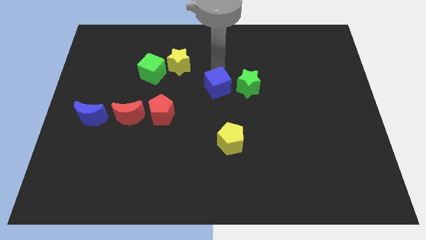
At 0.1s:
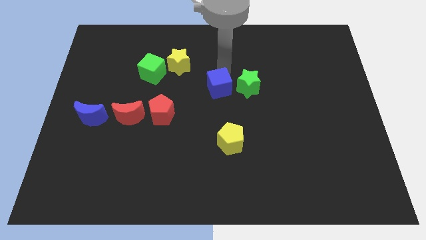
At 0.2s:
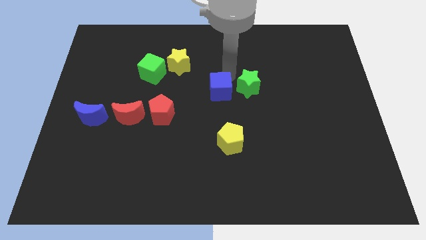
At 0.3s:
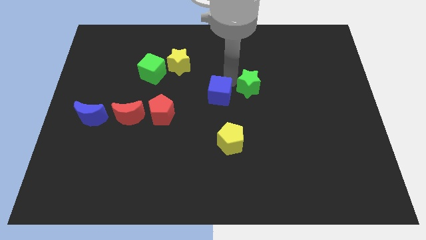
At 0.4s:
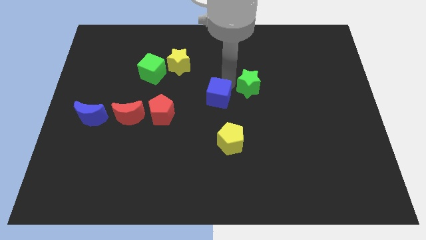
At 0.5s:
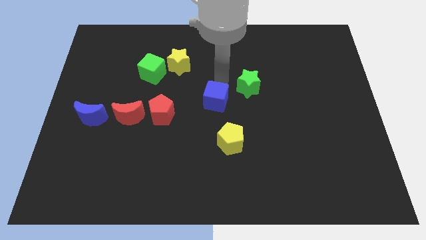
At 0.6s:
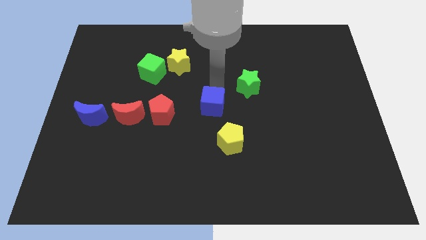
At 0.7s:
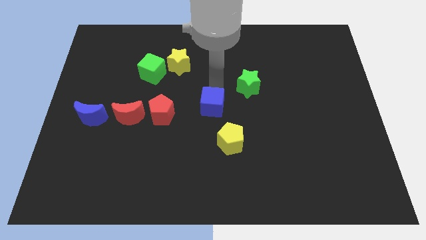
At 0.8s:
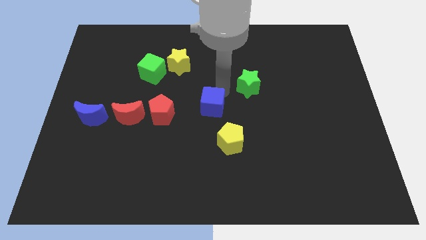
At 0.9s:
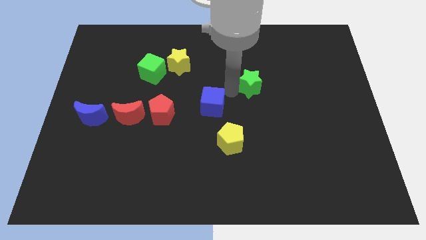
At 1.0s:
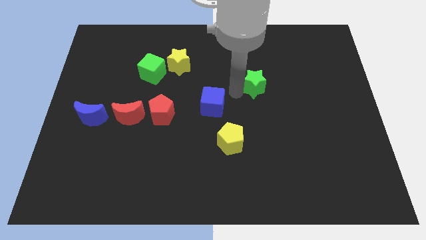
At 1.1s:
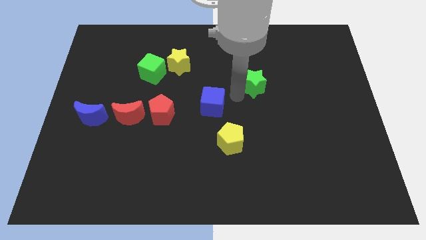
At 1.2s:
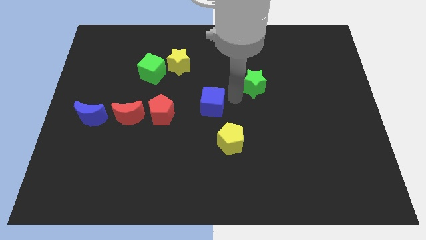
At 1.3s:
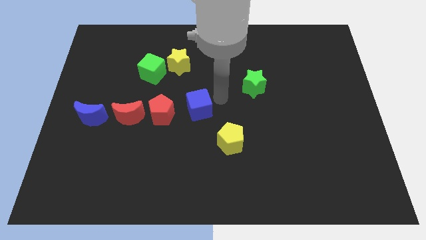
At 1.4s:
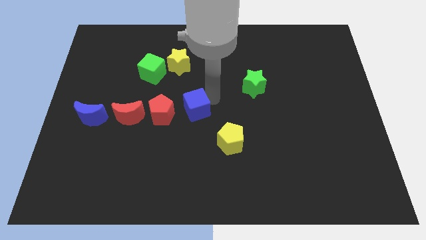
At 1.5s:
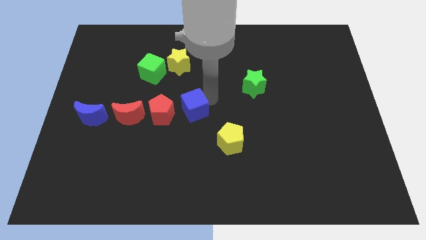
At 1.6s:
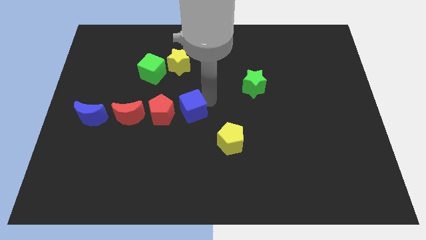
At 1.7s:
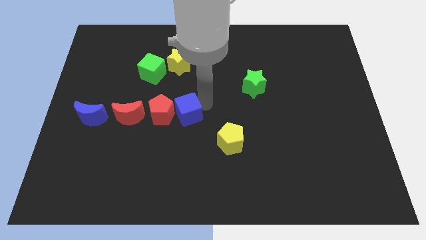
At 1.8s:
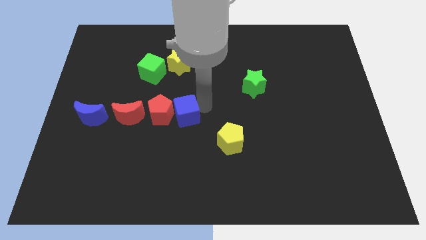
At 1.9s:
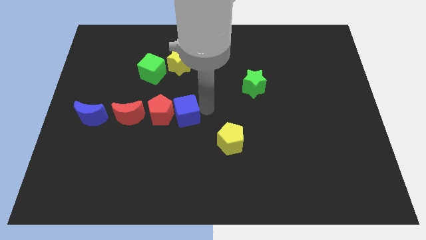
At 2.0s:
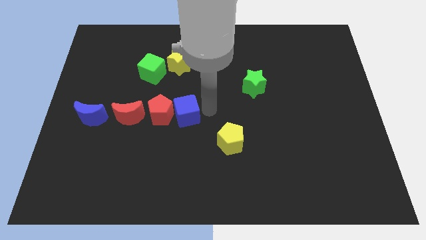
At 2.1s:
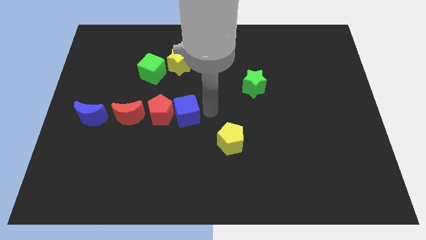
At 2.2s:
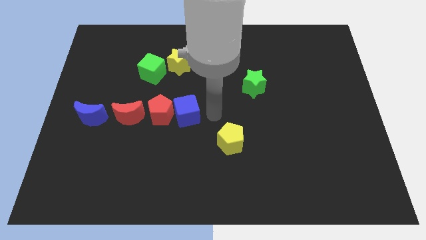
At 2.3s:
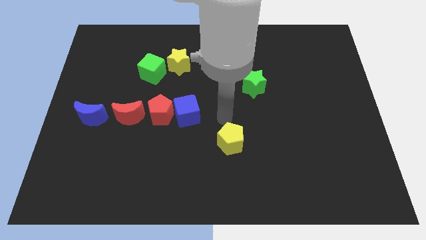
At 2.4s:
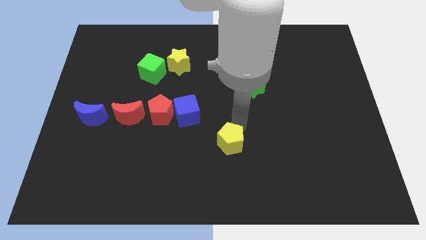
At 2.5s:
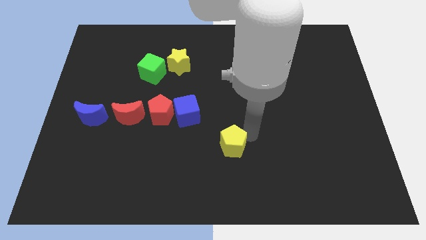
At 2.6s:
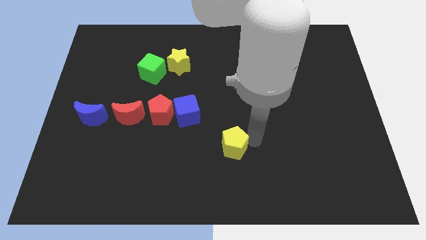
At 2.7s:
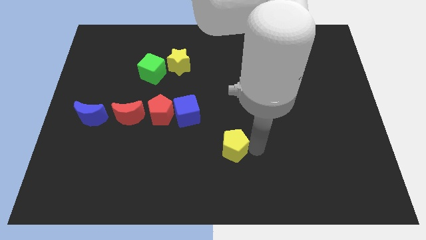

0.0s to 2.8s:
push the blue cube into red pentagon

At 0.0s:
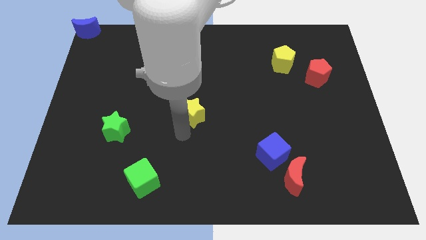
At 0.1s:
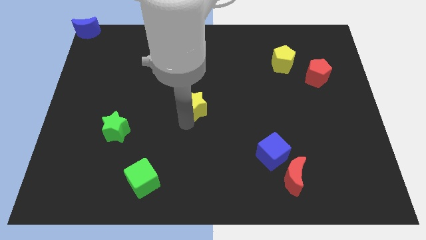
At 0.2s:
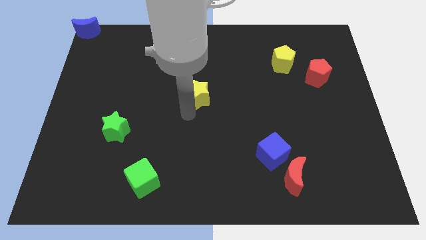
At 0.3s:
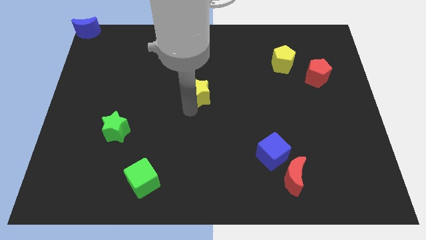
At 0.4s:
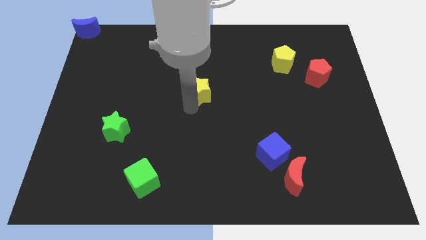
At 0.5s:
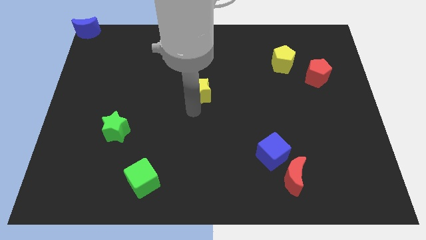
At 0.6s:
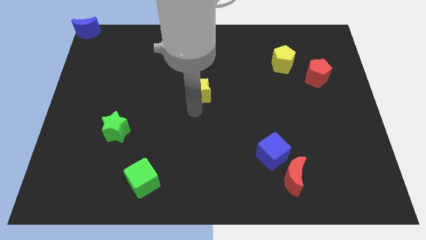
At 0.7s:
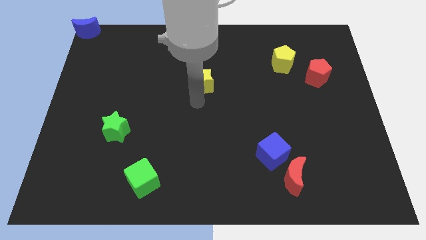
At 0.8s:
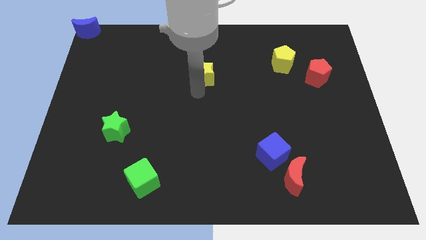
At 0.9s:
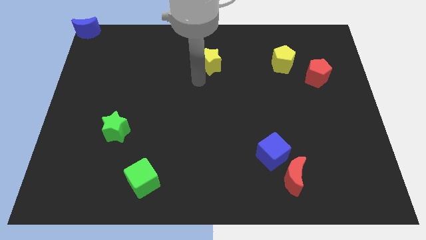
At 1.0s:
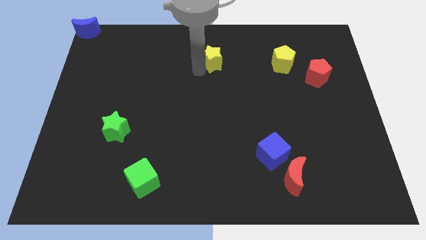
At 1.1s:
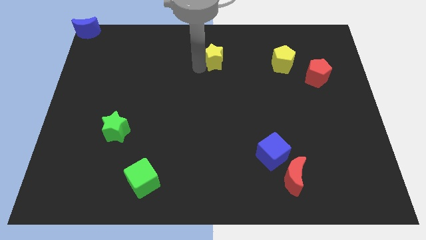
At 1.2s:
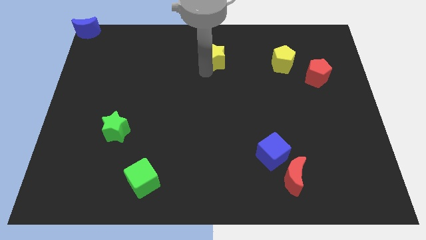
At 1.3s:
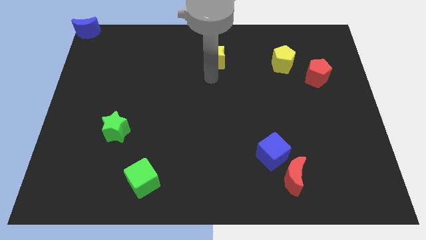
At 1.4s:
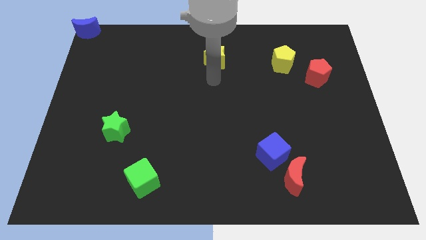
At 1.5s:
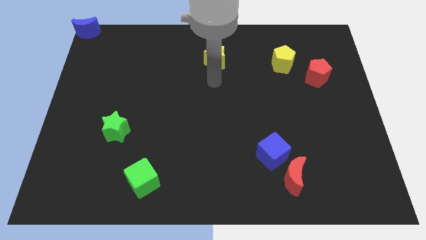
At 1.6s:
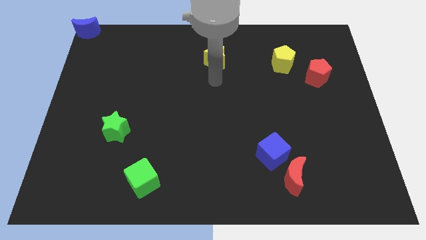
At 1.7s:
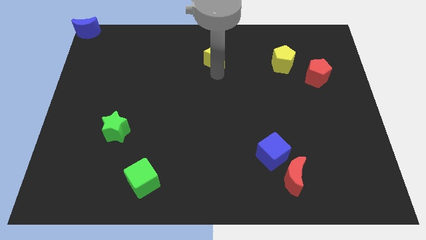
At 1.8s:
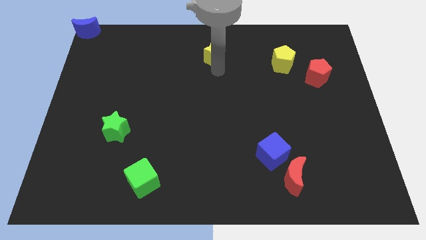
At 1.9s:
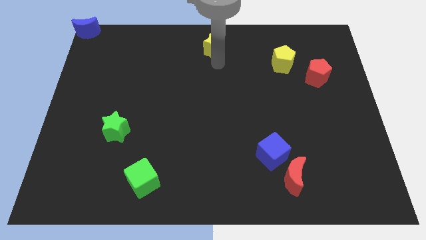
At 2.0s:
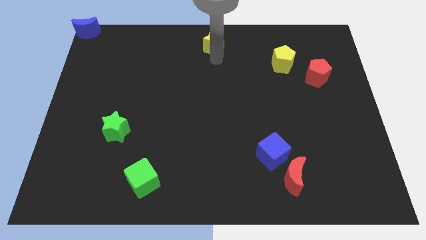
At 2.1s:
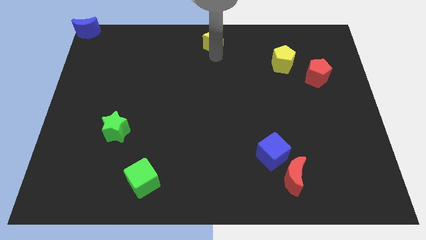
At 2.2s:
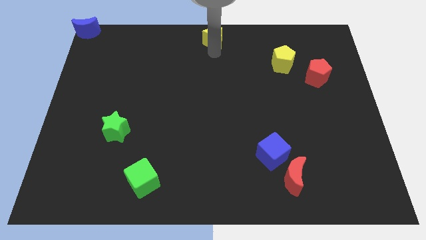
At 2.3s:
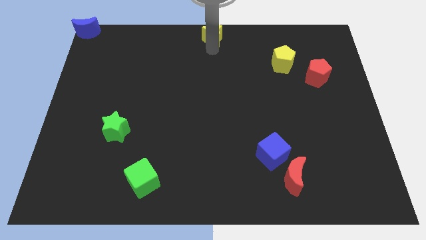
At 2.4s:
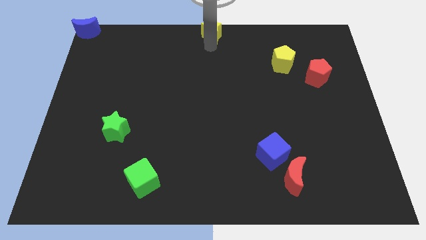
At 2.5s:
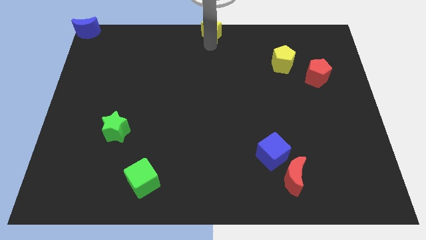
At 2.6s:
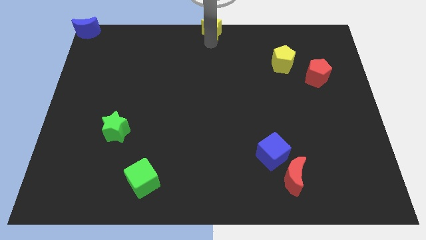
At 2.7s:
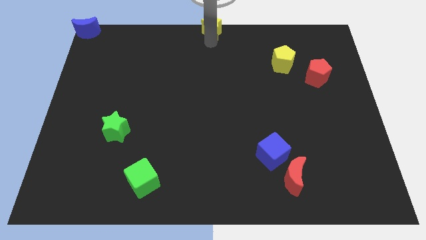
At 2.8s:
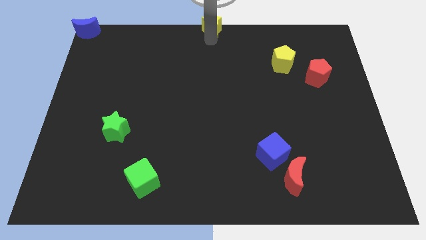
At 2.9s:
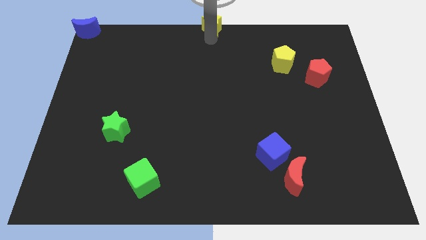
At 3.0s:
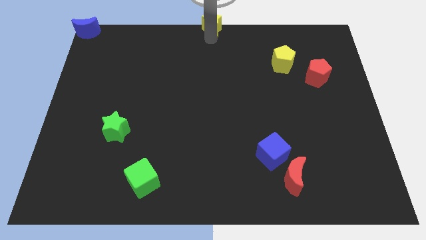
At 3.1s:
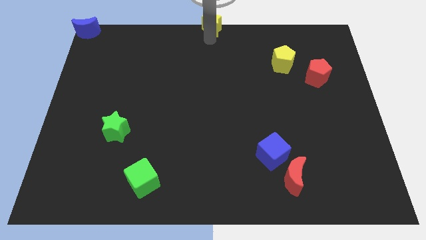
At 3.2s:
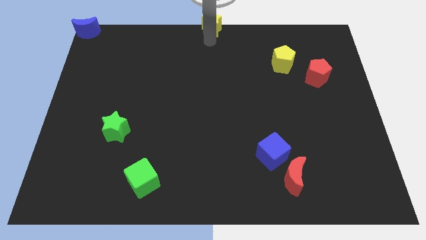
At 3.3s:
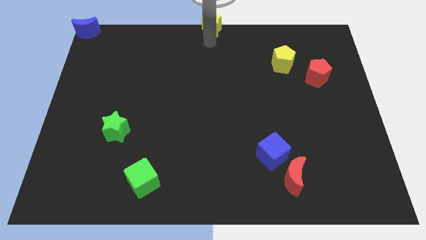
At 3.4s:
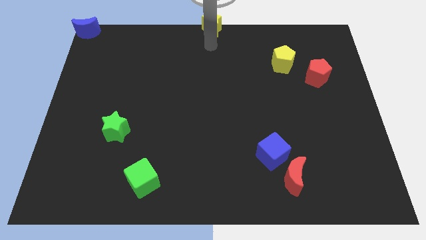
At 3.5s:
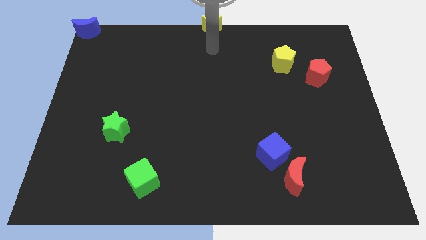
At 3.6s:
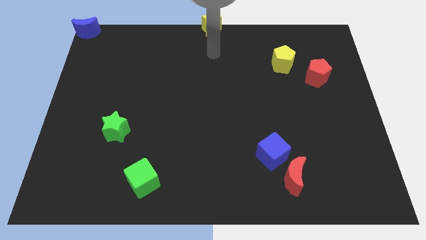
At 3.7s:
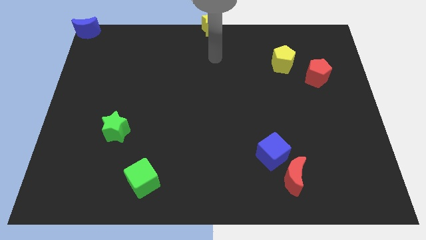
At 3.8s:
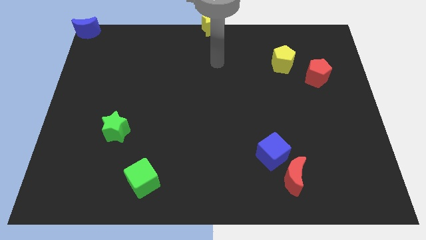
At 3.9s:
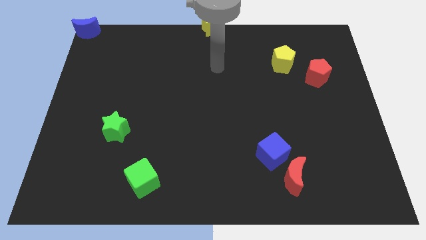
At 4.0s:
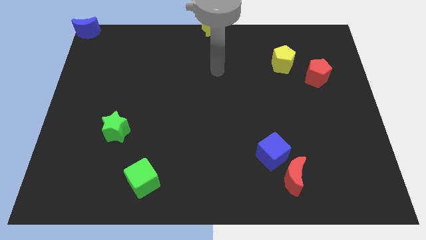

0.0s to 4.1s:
place yellow star in the top center

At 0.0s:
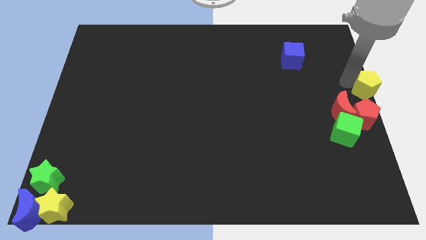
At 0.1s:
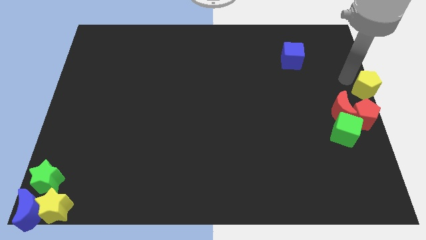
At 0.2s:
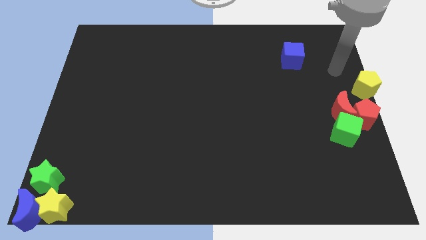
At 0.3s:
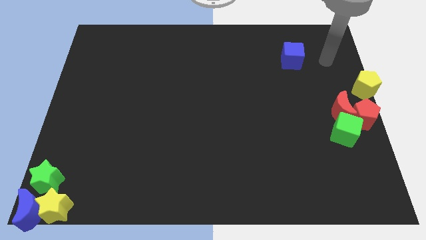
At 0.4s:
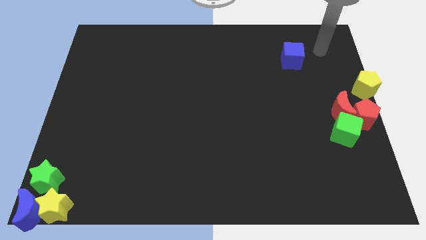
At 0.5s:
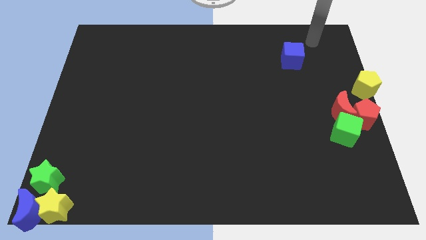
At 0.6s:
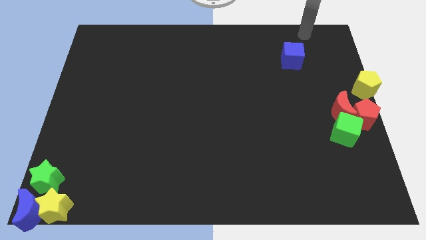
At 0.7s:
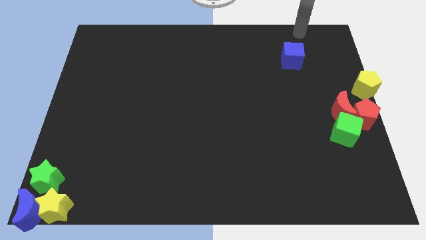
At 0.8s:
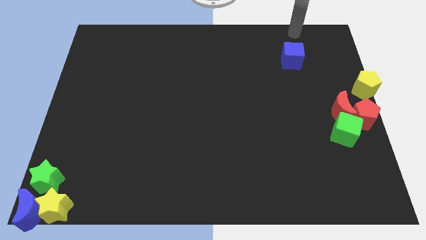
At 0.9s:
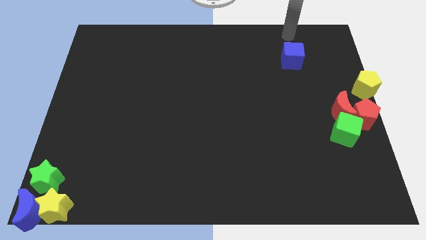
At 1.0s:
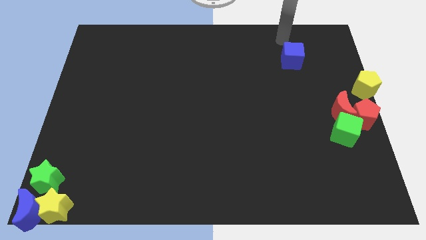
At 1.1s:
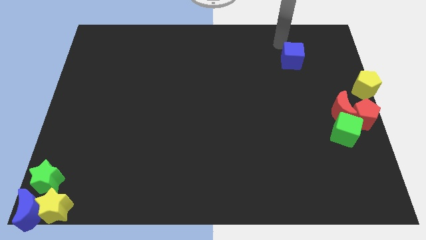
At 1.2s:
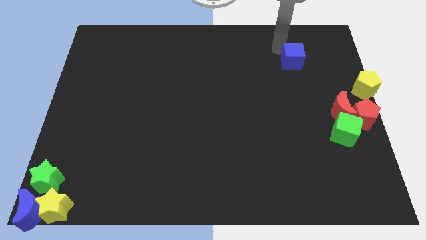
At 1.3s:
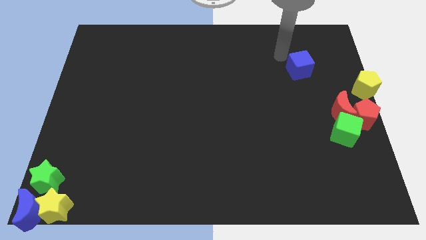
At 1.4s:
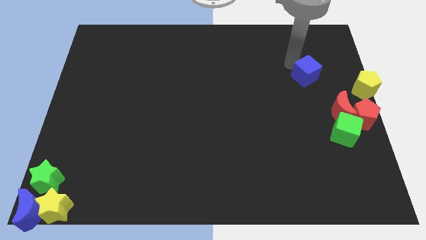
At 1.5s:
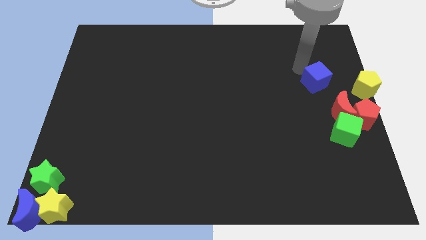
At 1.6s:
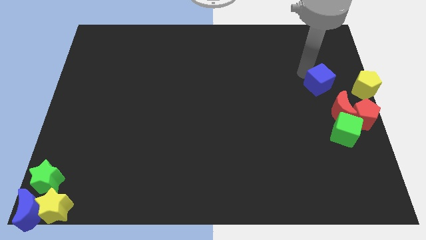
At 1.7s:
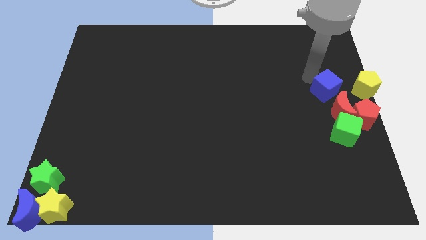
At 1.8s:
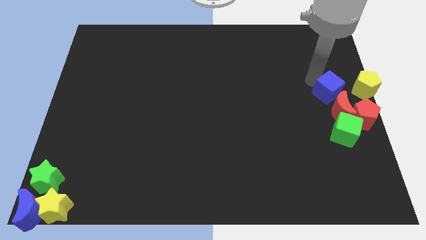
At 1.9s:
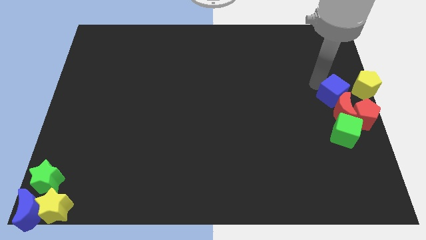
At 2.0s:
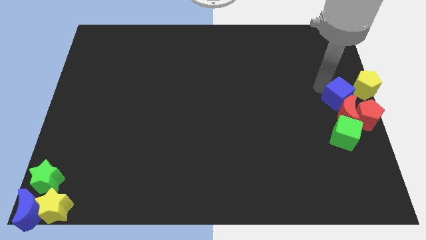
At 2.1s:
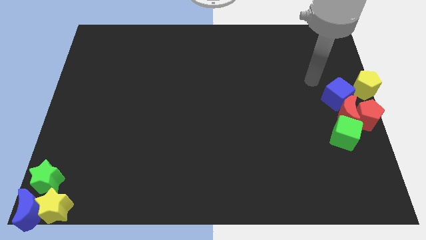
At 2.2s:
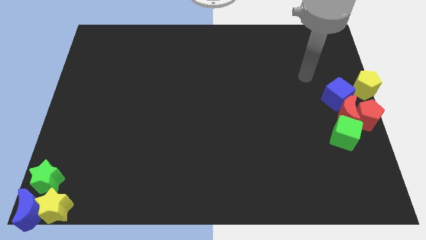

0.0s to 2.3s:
make the blue cube to touch the red crescent
